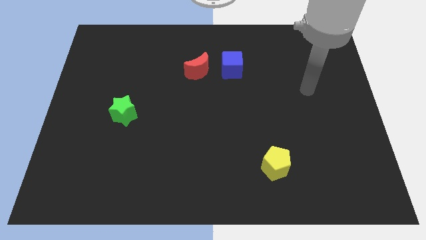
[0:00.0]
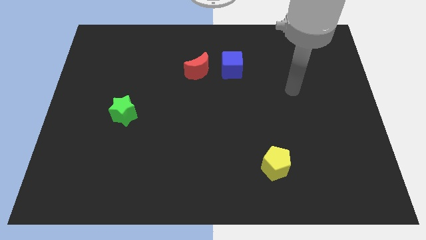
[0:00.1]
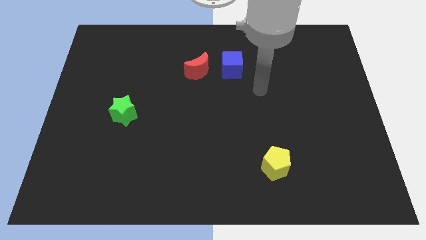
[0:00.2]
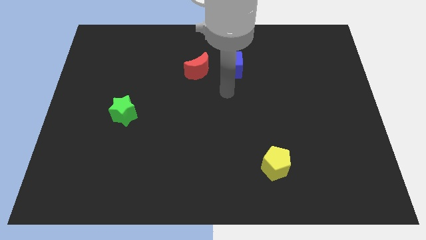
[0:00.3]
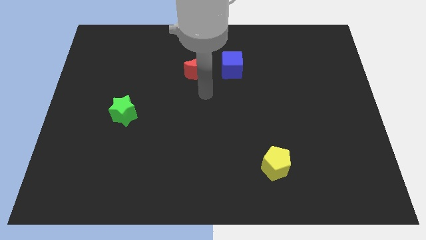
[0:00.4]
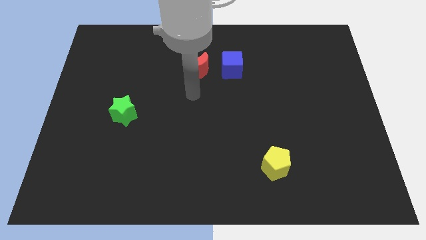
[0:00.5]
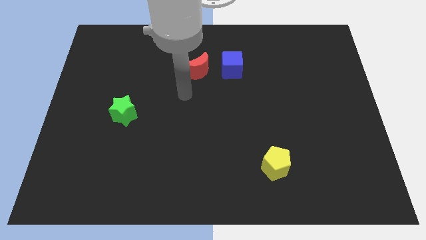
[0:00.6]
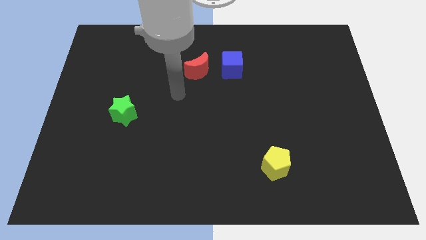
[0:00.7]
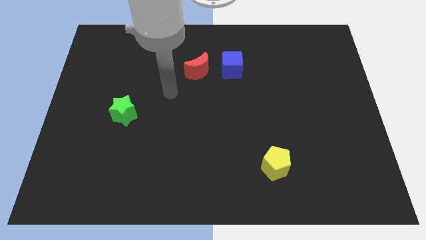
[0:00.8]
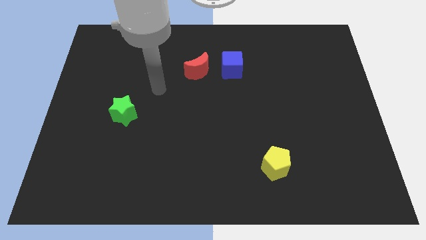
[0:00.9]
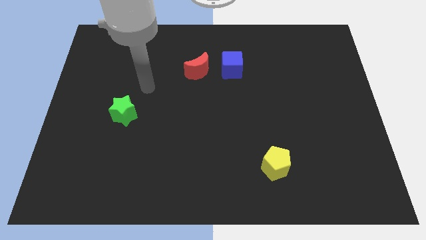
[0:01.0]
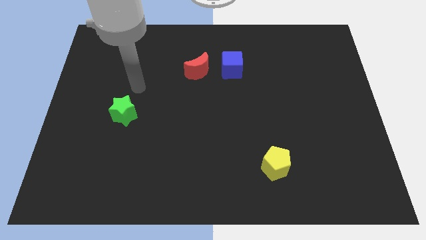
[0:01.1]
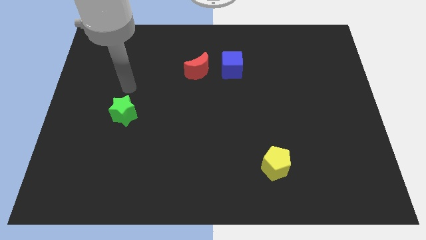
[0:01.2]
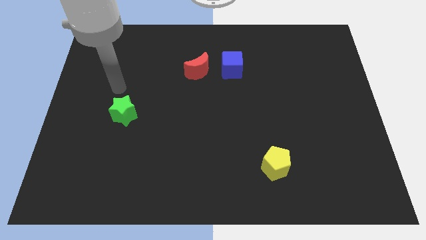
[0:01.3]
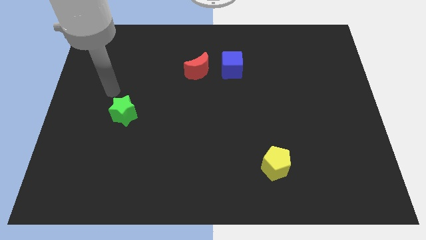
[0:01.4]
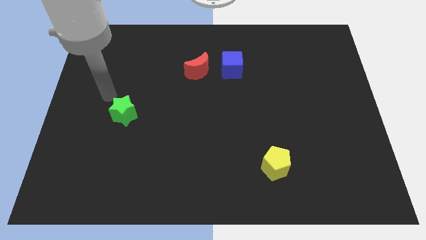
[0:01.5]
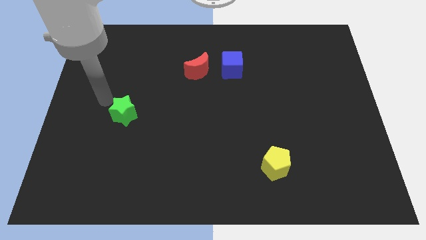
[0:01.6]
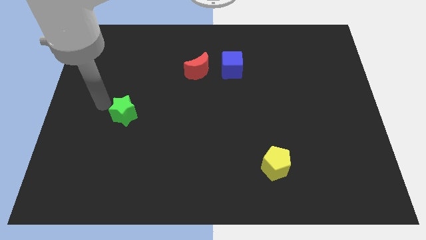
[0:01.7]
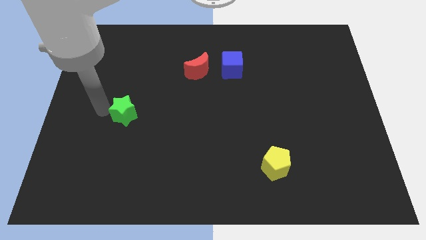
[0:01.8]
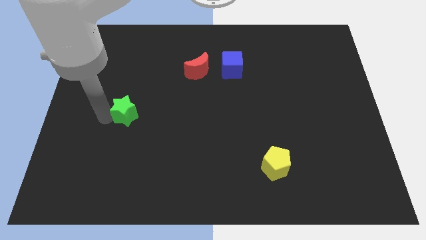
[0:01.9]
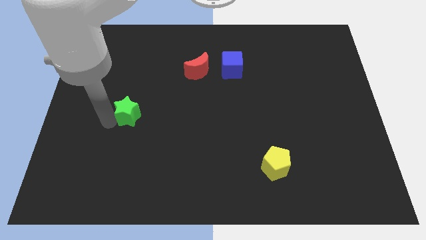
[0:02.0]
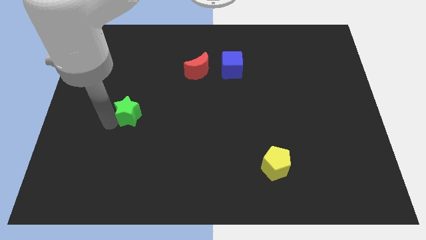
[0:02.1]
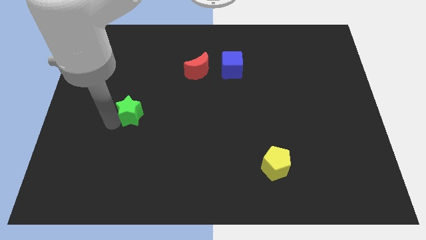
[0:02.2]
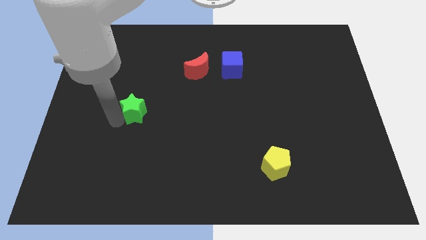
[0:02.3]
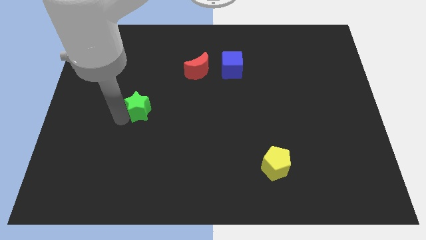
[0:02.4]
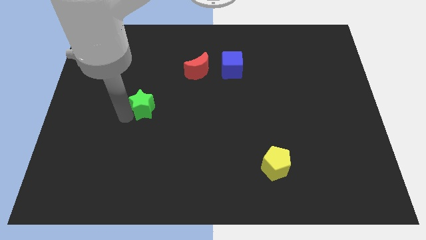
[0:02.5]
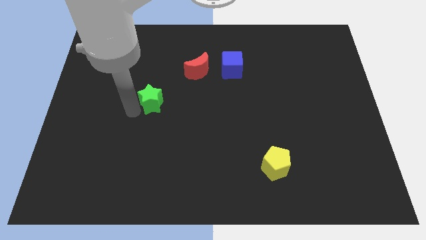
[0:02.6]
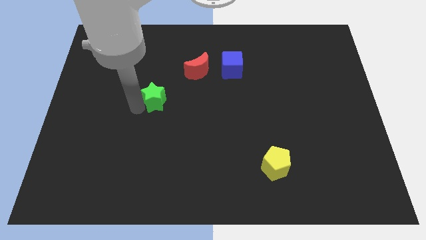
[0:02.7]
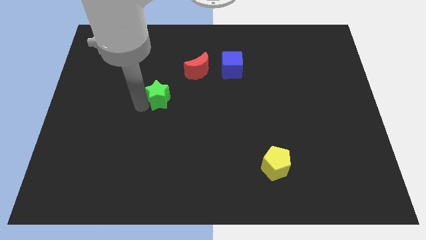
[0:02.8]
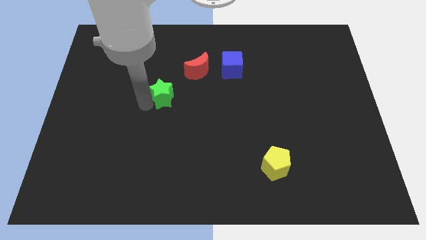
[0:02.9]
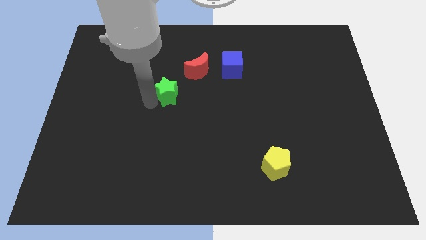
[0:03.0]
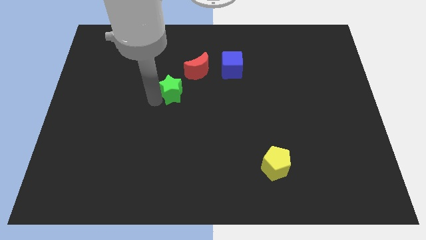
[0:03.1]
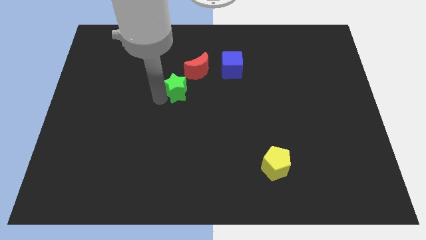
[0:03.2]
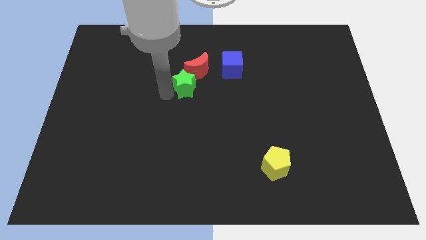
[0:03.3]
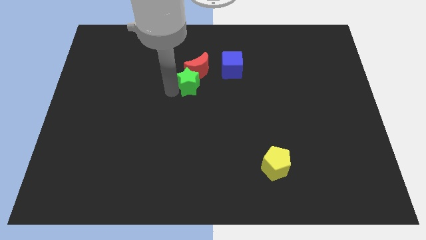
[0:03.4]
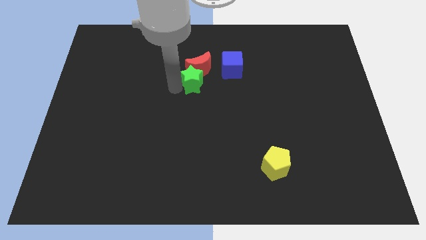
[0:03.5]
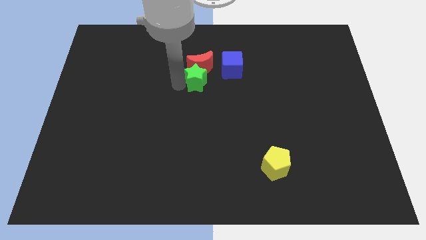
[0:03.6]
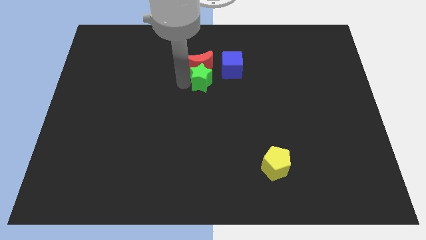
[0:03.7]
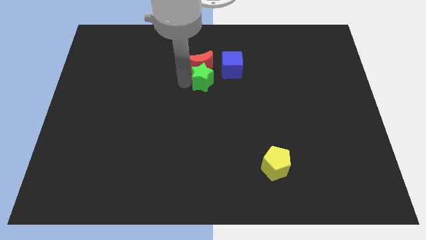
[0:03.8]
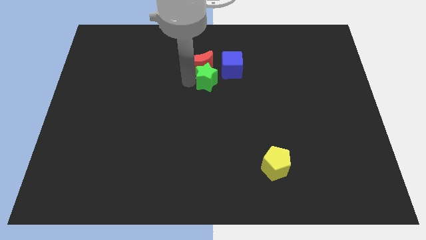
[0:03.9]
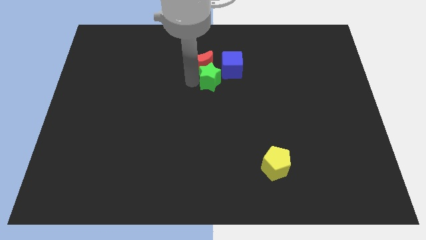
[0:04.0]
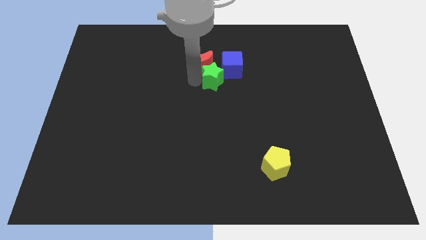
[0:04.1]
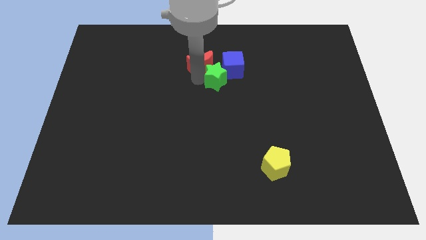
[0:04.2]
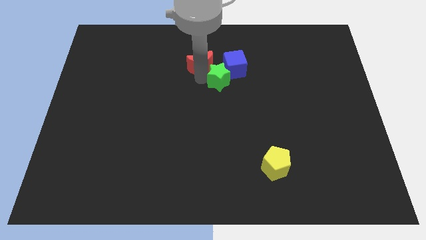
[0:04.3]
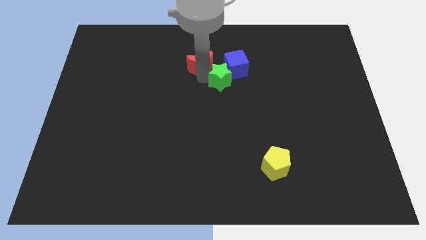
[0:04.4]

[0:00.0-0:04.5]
slide the star close to the cube

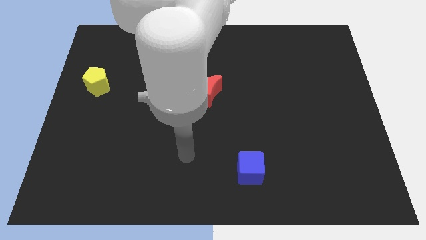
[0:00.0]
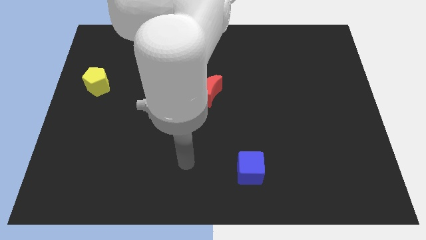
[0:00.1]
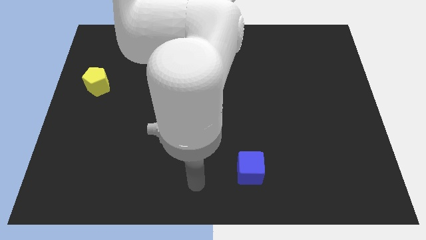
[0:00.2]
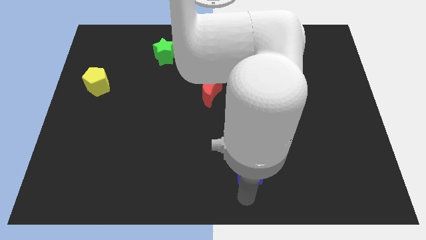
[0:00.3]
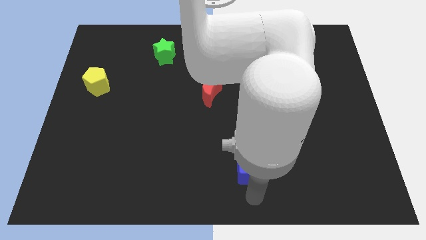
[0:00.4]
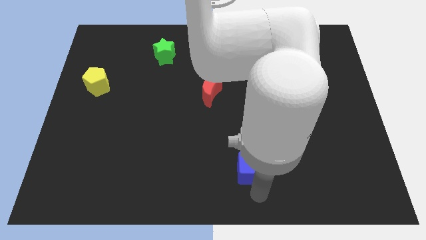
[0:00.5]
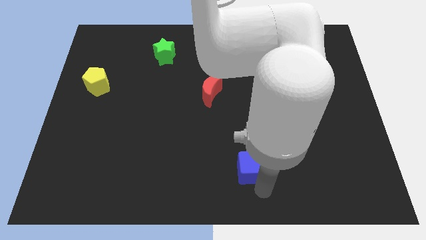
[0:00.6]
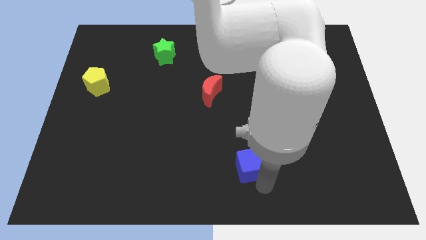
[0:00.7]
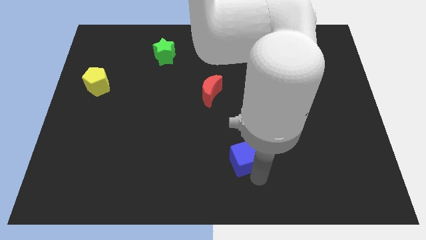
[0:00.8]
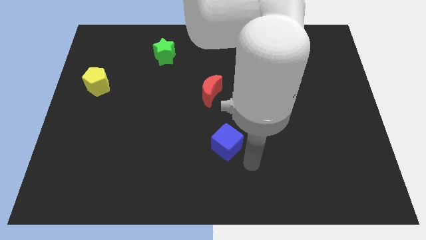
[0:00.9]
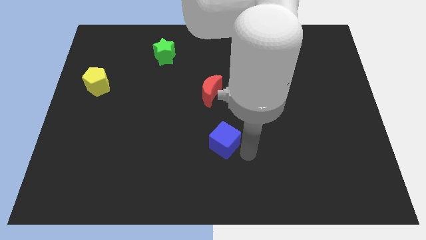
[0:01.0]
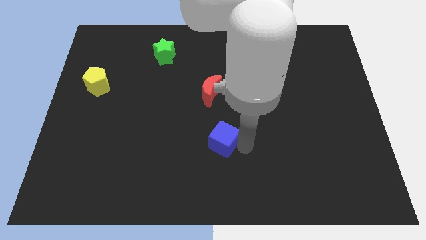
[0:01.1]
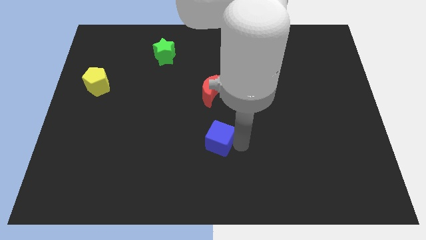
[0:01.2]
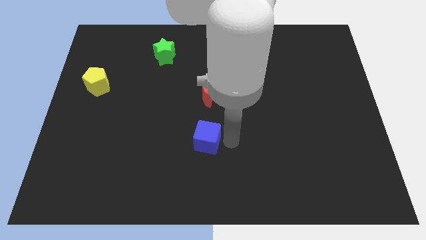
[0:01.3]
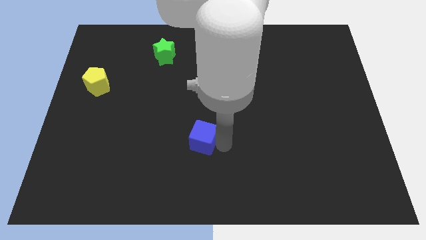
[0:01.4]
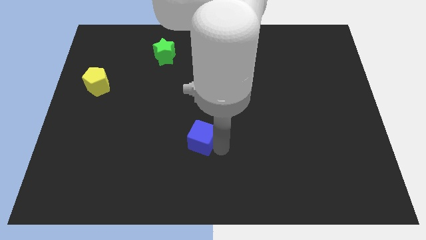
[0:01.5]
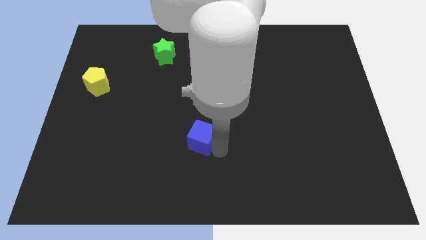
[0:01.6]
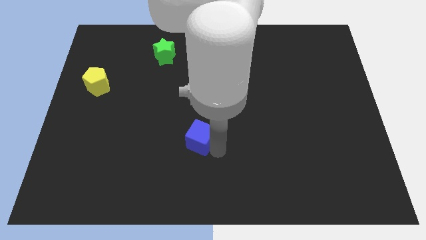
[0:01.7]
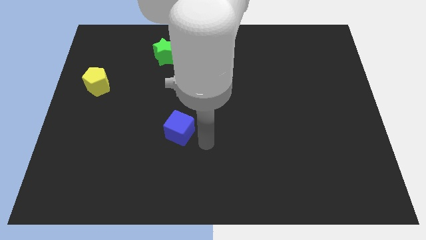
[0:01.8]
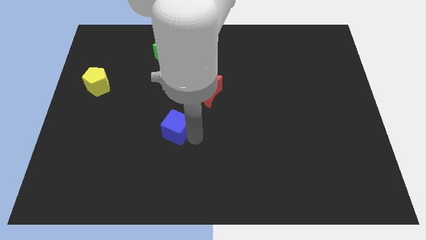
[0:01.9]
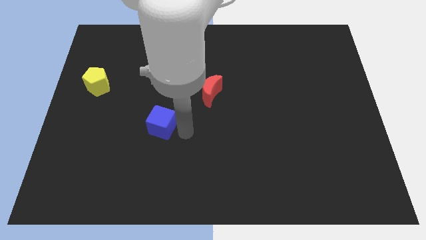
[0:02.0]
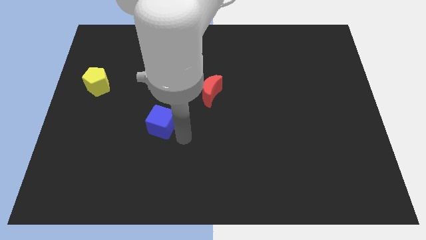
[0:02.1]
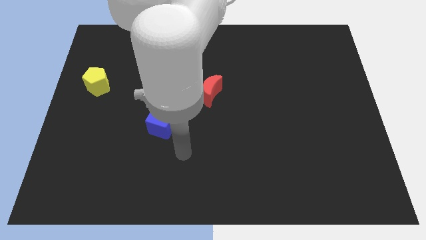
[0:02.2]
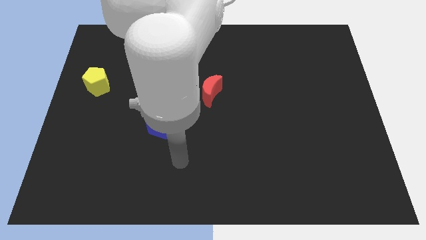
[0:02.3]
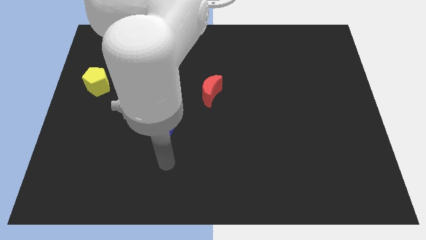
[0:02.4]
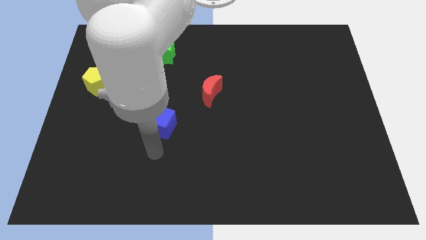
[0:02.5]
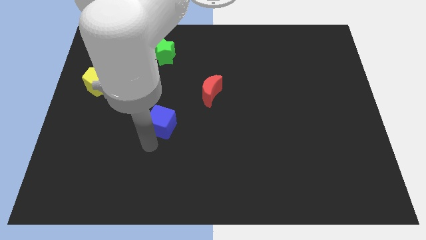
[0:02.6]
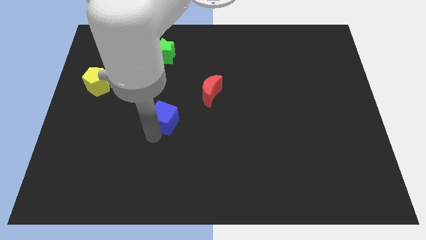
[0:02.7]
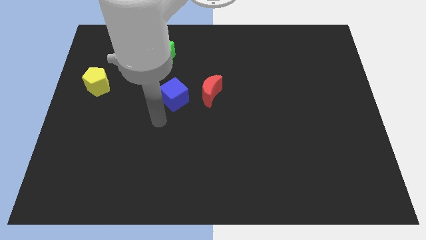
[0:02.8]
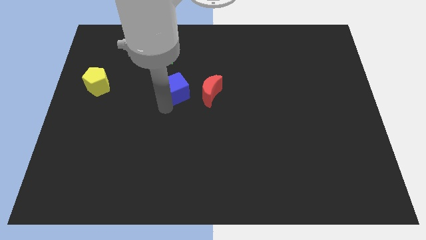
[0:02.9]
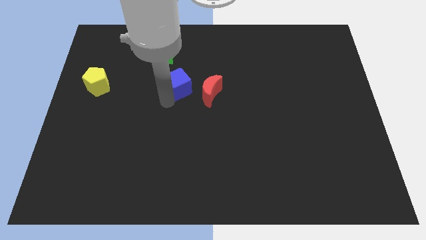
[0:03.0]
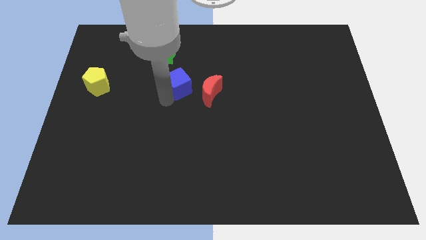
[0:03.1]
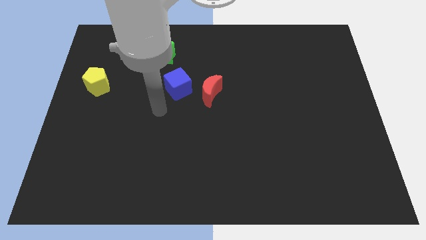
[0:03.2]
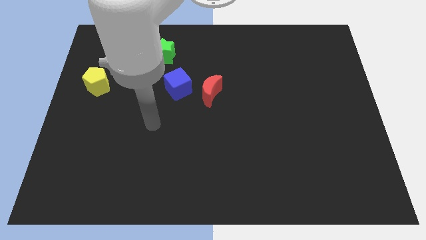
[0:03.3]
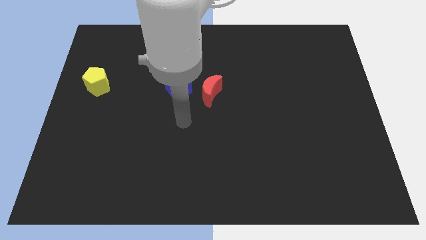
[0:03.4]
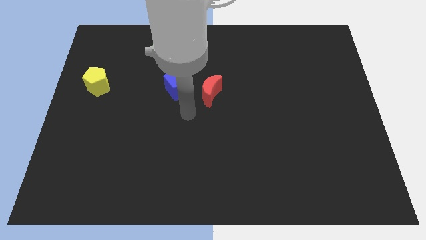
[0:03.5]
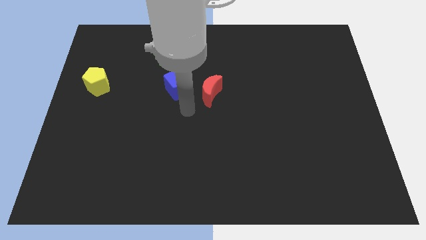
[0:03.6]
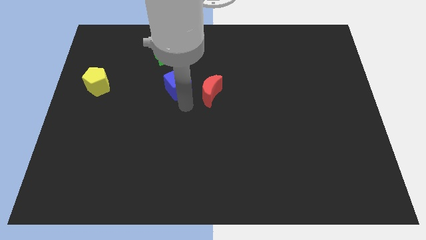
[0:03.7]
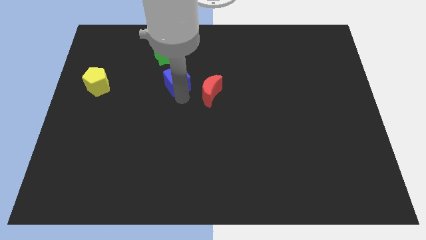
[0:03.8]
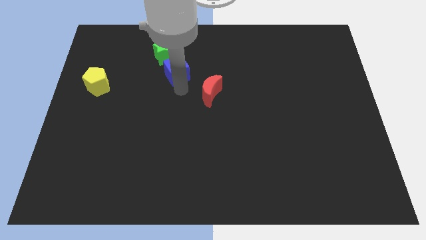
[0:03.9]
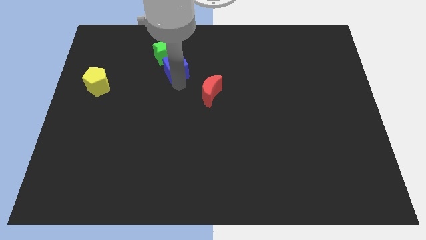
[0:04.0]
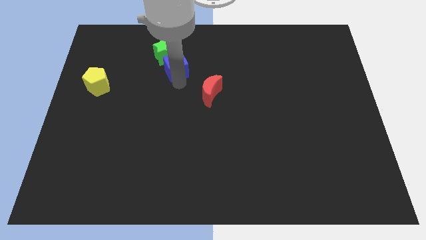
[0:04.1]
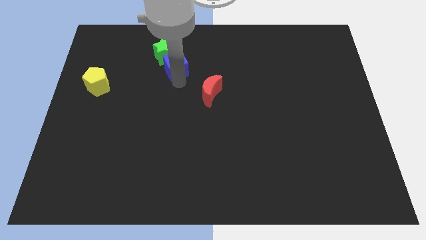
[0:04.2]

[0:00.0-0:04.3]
put the blue block next to the green block
